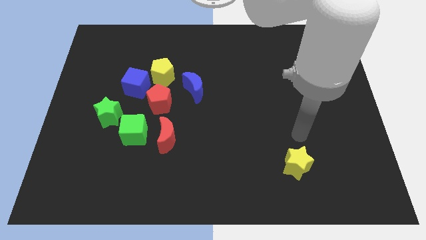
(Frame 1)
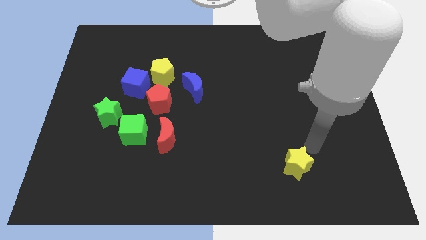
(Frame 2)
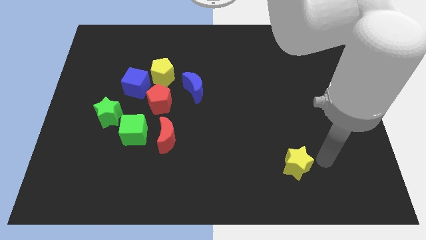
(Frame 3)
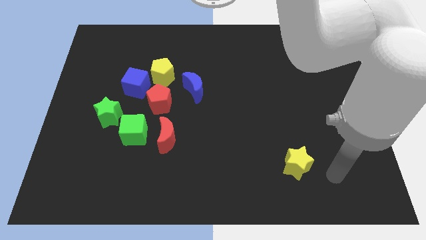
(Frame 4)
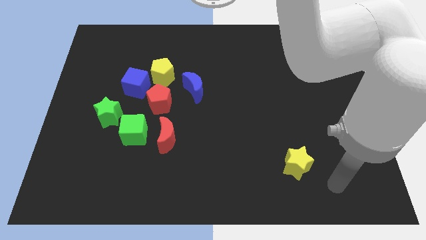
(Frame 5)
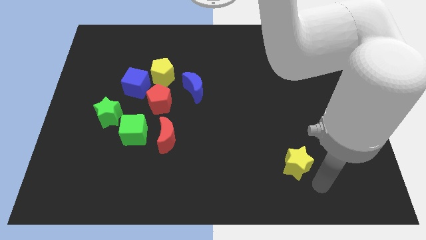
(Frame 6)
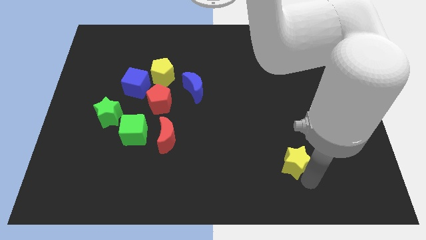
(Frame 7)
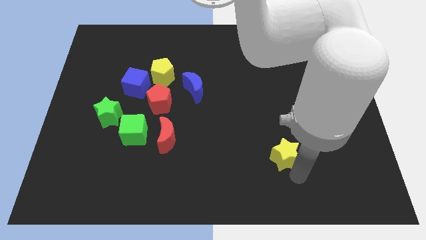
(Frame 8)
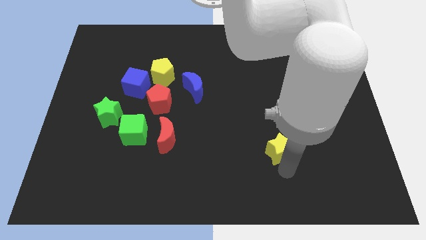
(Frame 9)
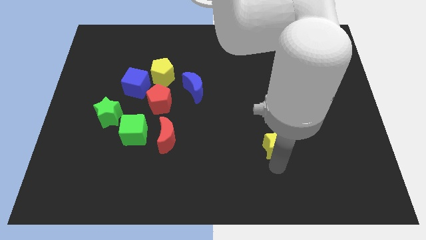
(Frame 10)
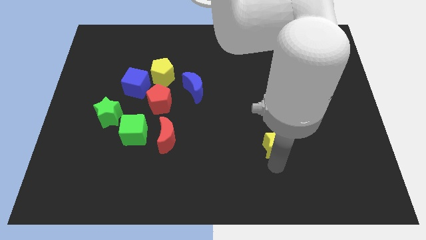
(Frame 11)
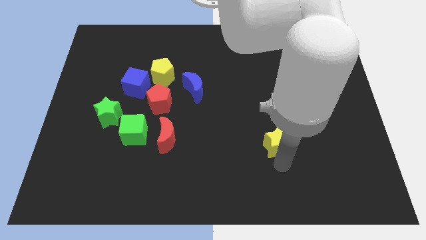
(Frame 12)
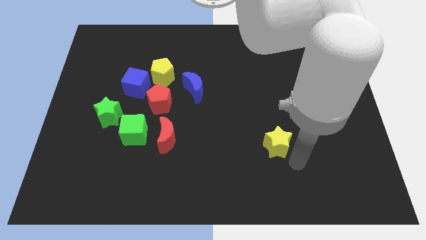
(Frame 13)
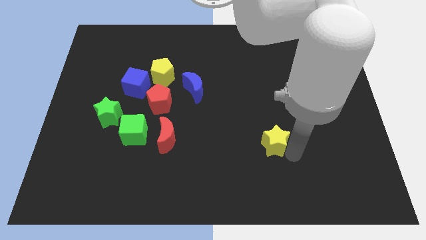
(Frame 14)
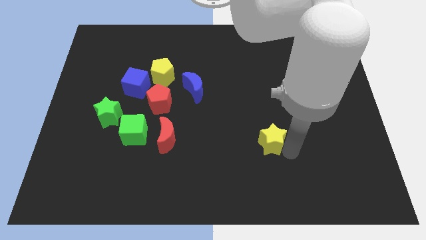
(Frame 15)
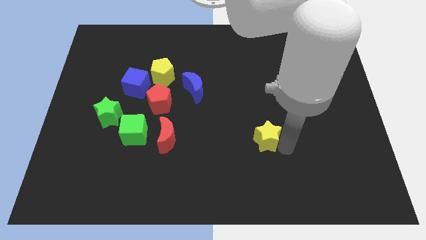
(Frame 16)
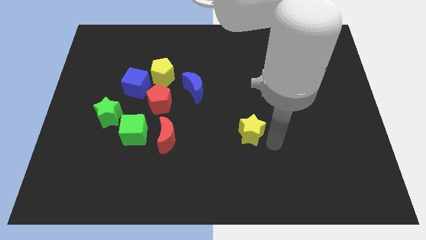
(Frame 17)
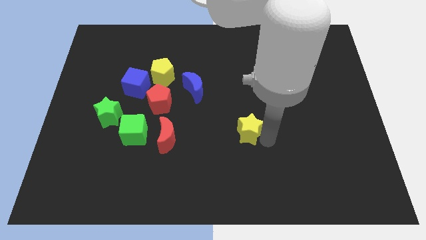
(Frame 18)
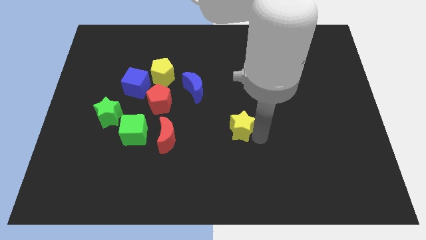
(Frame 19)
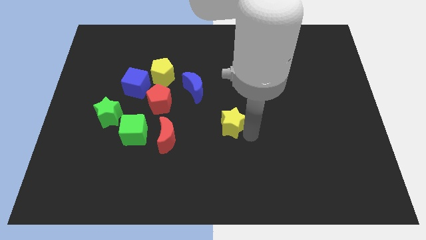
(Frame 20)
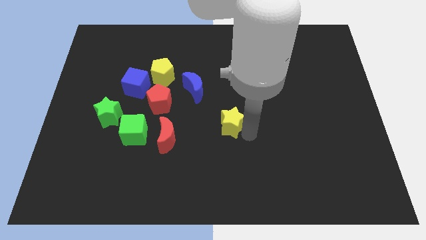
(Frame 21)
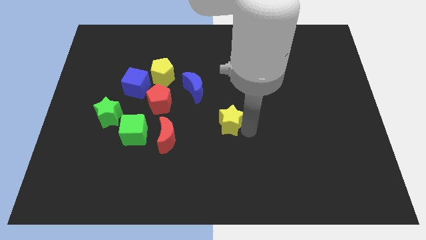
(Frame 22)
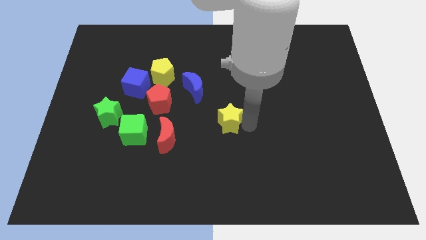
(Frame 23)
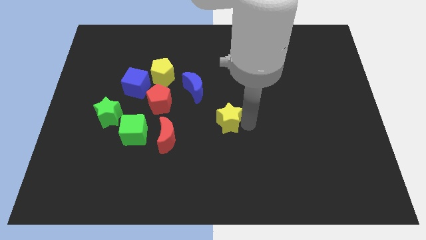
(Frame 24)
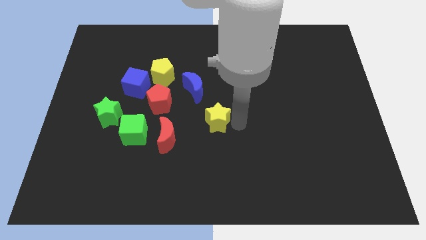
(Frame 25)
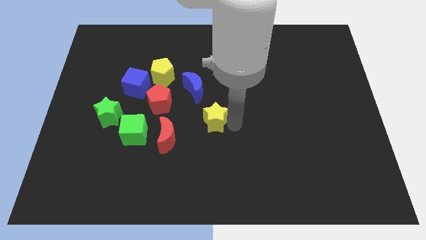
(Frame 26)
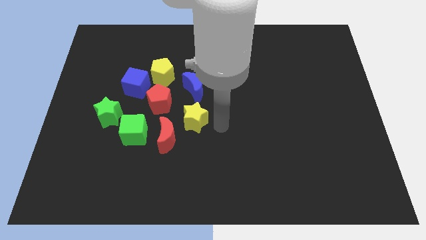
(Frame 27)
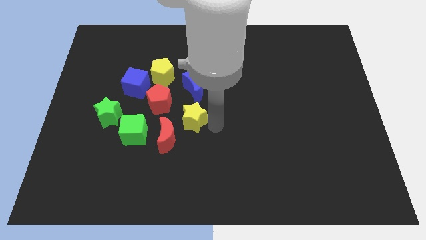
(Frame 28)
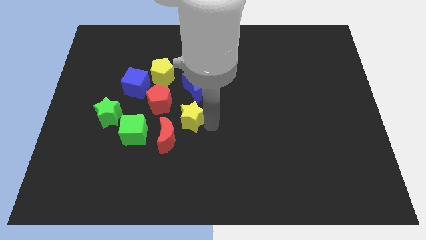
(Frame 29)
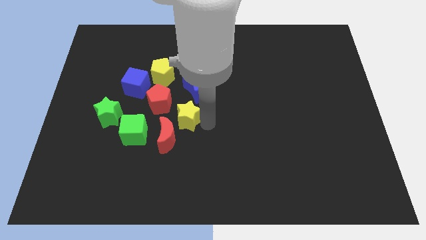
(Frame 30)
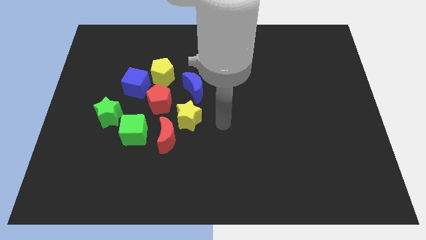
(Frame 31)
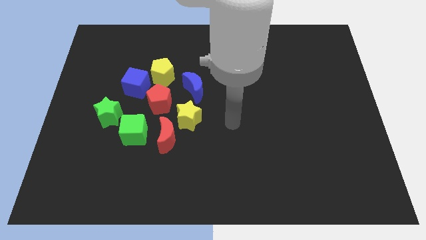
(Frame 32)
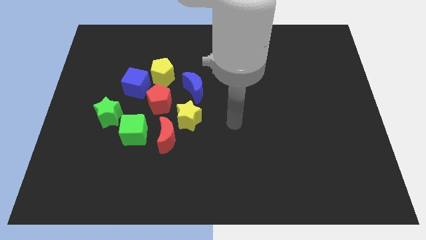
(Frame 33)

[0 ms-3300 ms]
move yellow star towards red pentagon

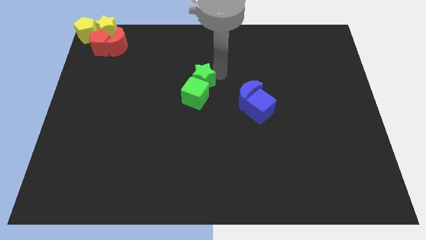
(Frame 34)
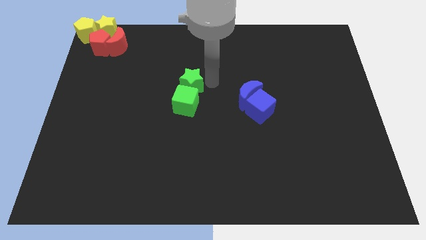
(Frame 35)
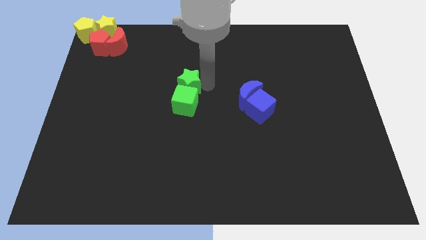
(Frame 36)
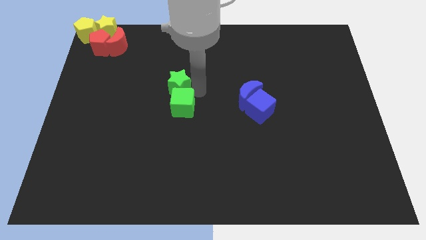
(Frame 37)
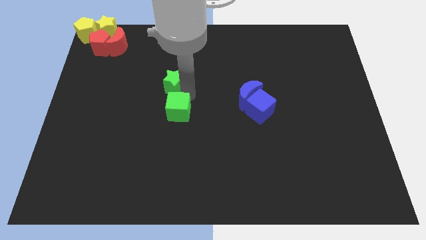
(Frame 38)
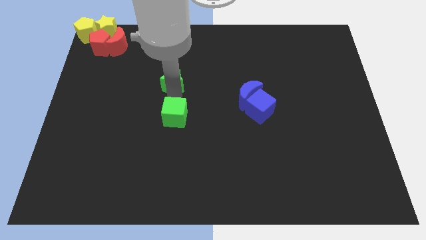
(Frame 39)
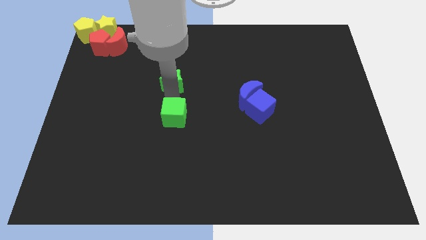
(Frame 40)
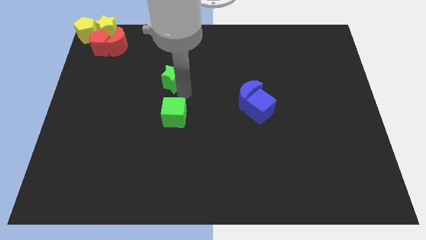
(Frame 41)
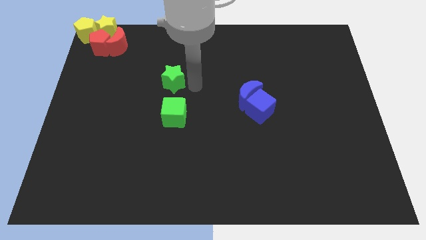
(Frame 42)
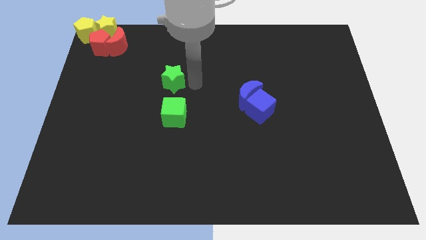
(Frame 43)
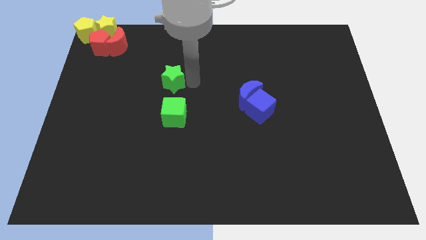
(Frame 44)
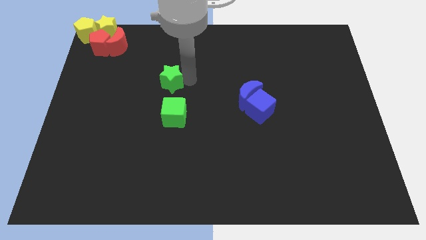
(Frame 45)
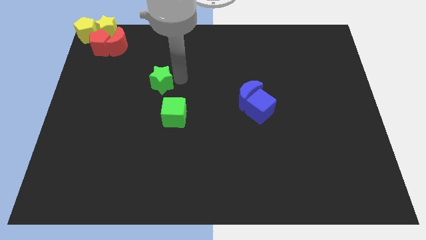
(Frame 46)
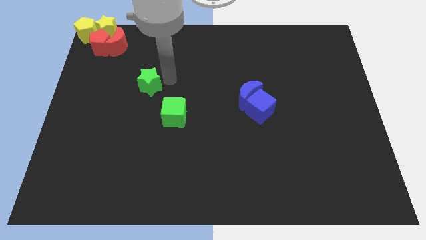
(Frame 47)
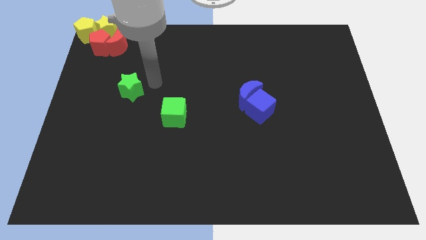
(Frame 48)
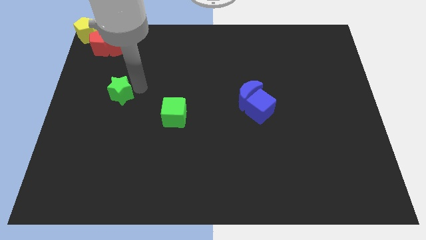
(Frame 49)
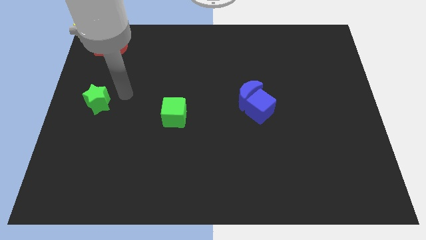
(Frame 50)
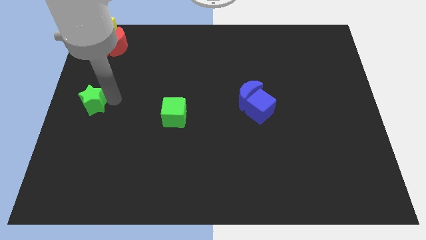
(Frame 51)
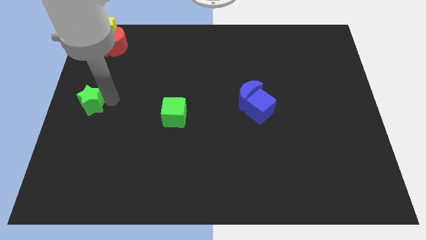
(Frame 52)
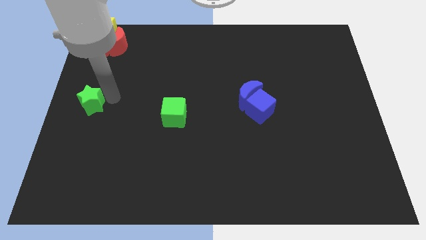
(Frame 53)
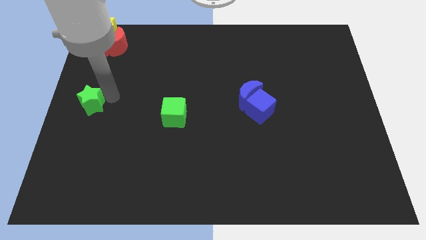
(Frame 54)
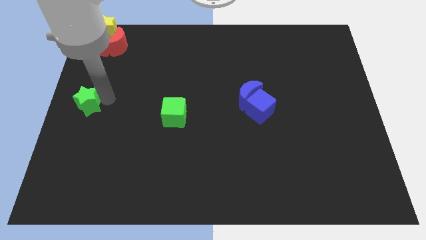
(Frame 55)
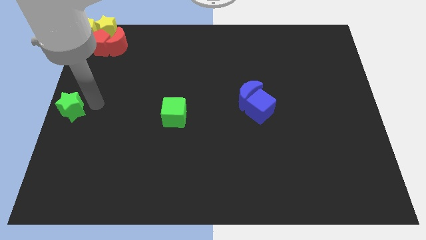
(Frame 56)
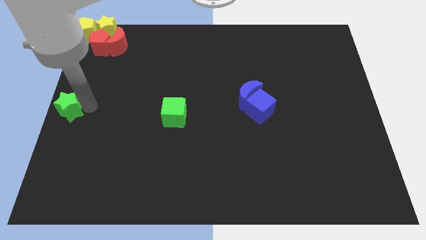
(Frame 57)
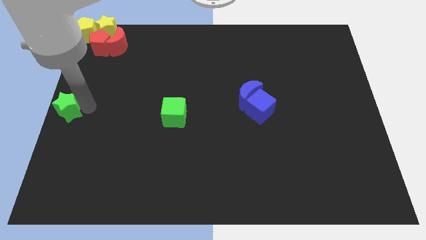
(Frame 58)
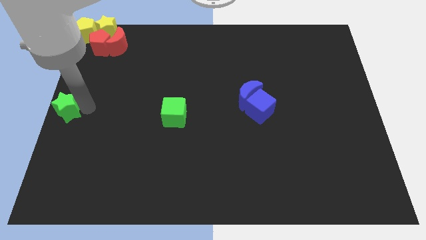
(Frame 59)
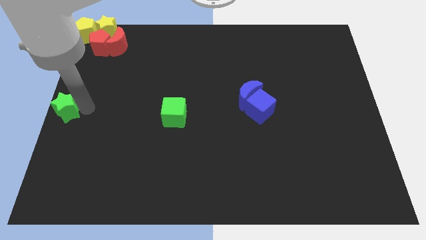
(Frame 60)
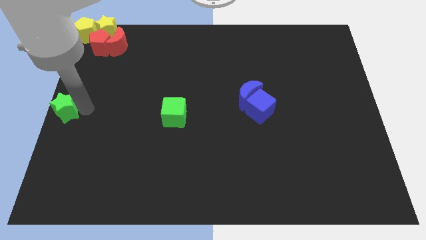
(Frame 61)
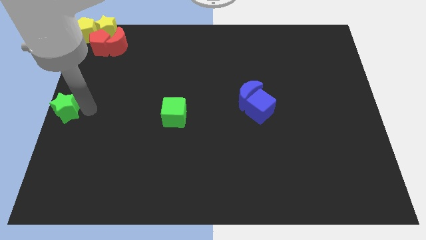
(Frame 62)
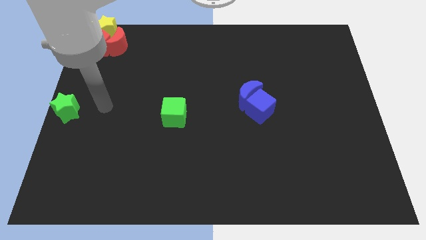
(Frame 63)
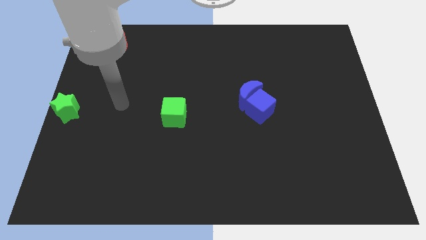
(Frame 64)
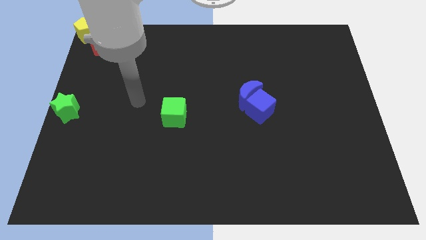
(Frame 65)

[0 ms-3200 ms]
move the green star to the center left of the board

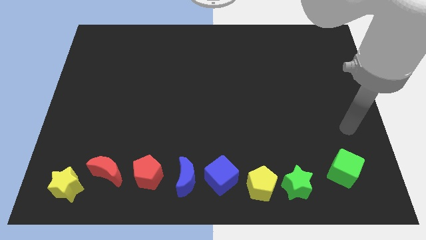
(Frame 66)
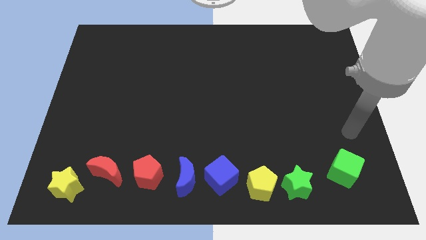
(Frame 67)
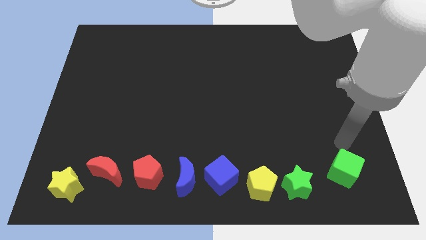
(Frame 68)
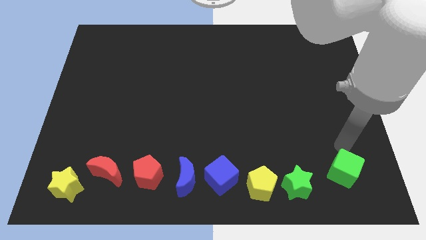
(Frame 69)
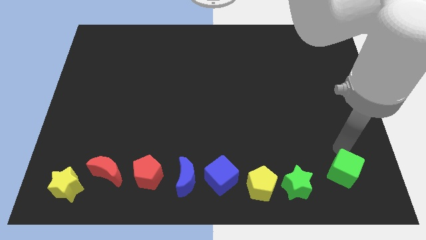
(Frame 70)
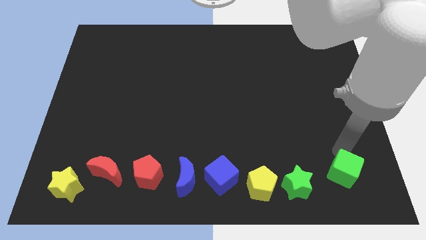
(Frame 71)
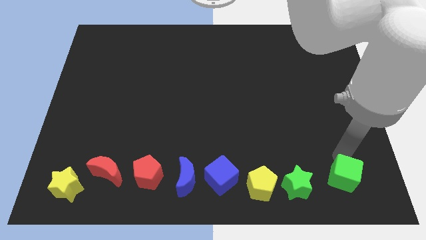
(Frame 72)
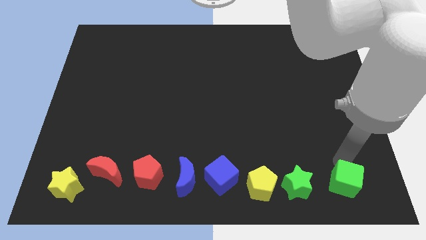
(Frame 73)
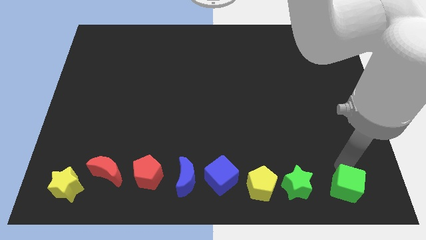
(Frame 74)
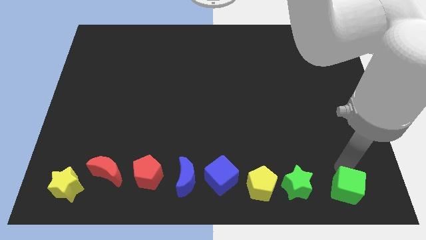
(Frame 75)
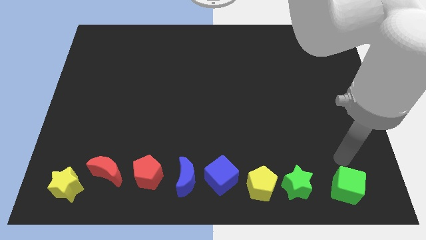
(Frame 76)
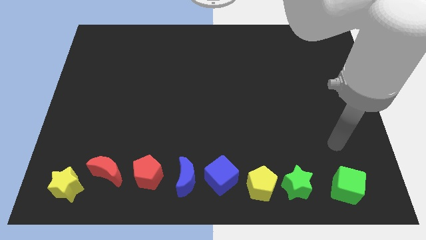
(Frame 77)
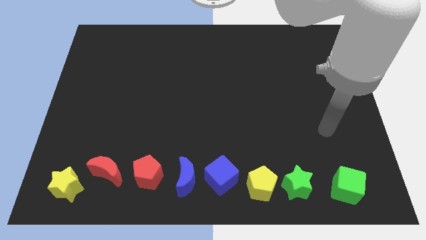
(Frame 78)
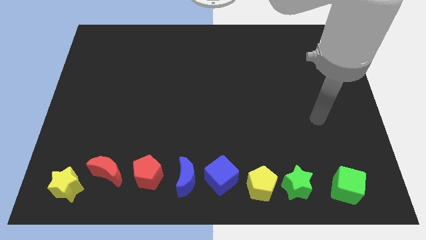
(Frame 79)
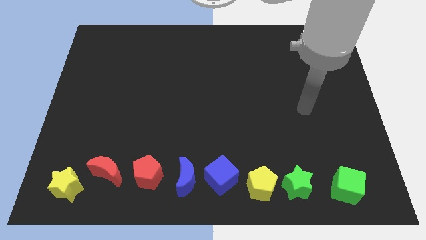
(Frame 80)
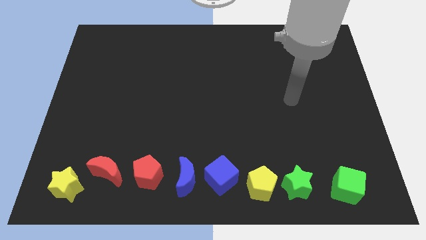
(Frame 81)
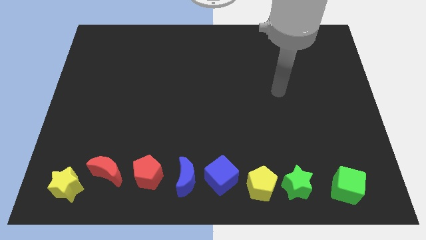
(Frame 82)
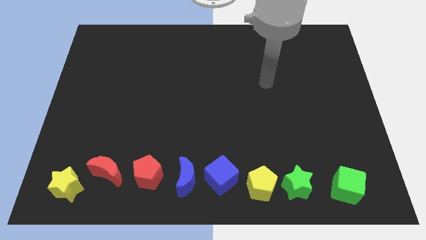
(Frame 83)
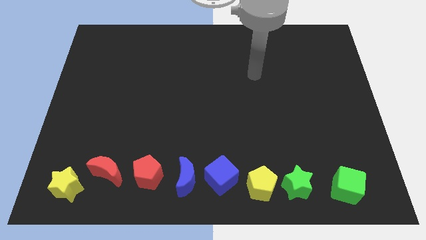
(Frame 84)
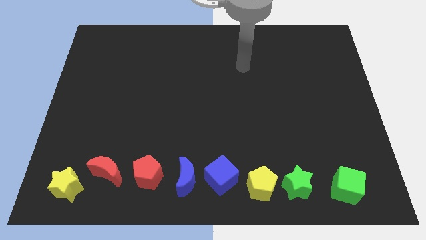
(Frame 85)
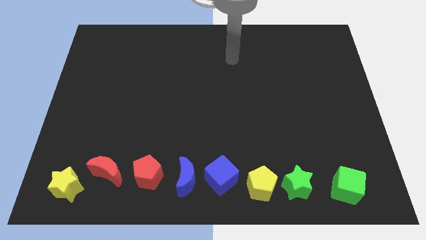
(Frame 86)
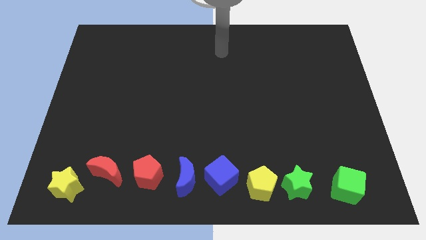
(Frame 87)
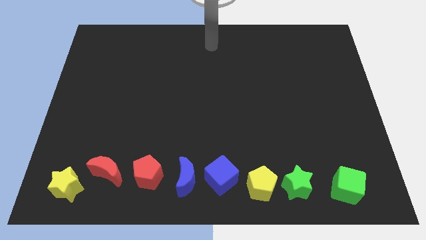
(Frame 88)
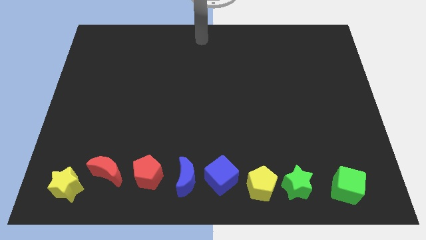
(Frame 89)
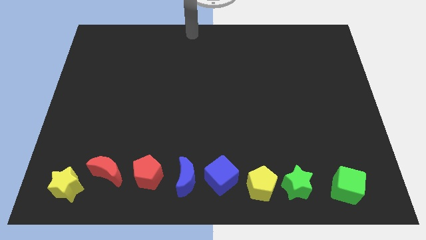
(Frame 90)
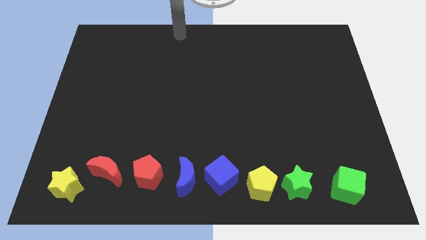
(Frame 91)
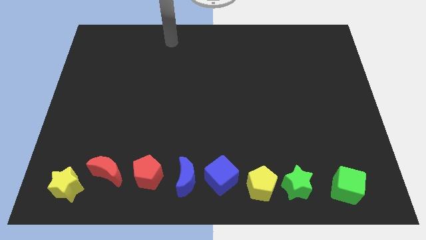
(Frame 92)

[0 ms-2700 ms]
move your arm towards the top center of the board
